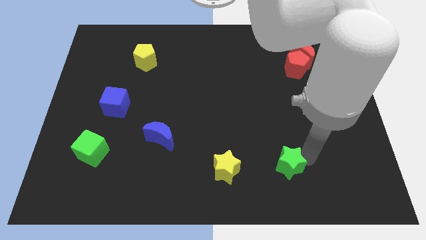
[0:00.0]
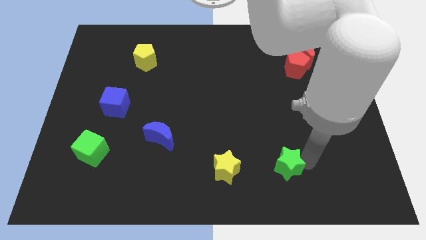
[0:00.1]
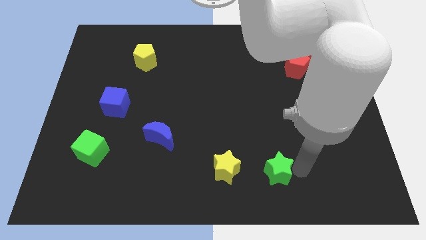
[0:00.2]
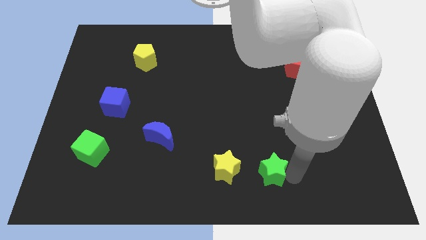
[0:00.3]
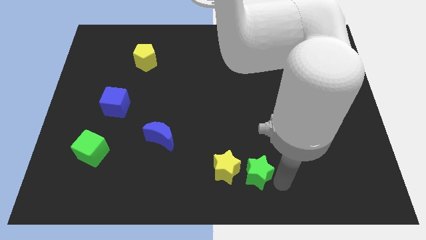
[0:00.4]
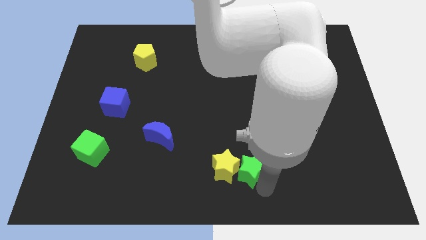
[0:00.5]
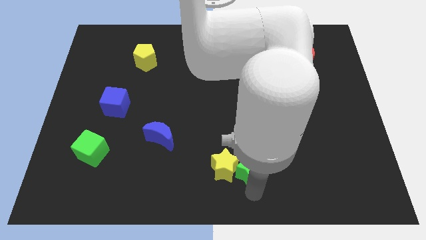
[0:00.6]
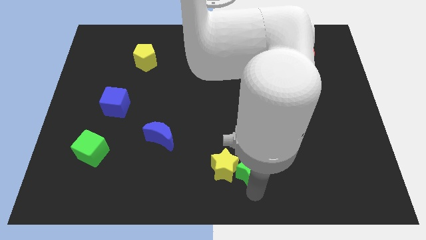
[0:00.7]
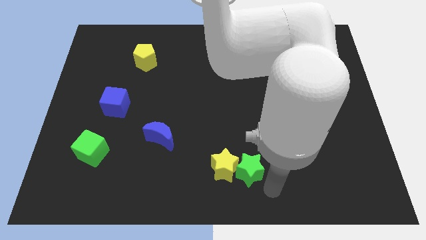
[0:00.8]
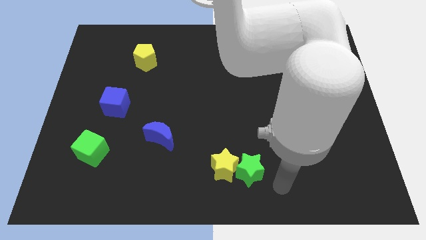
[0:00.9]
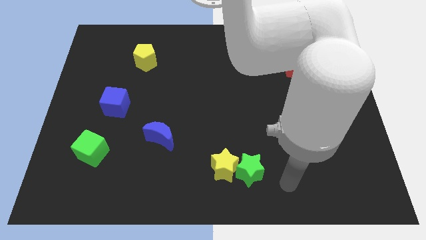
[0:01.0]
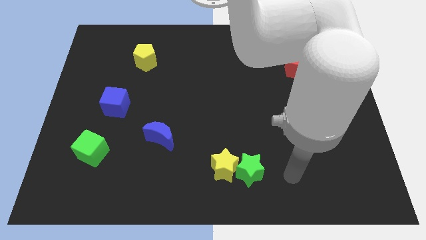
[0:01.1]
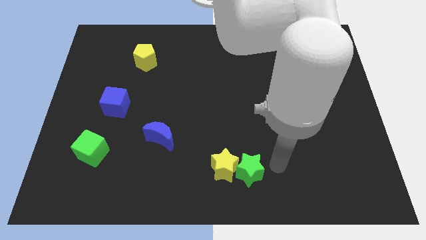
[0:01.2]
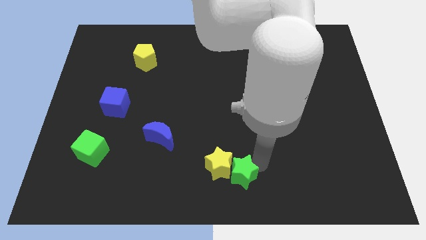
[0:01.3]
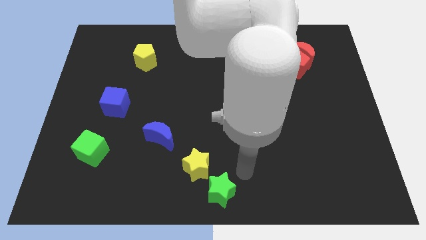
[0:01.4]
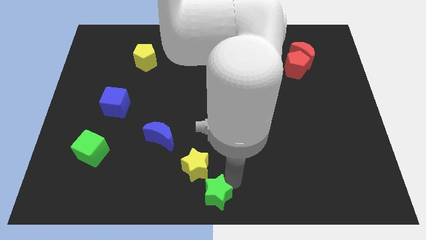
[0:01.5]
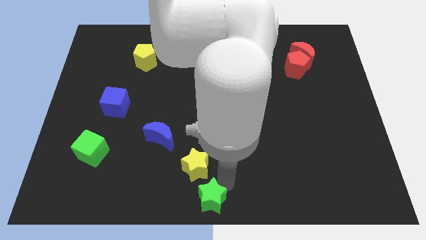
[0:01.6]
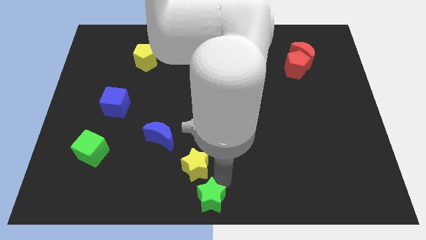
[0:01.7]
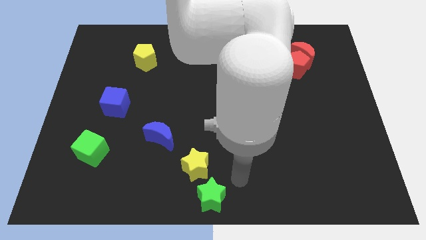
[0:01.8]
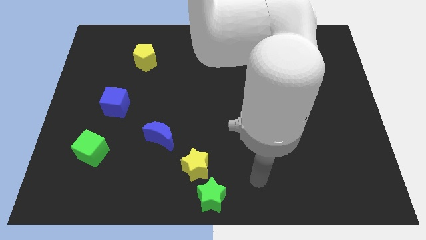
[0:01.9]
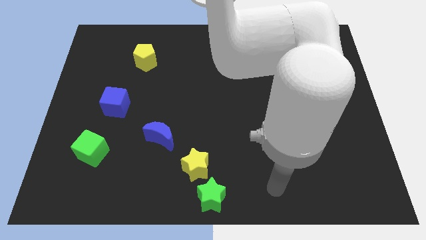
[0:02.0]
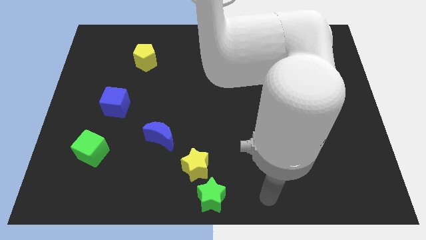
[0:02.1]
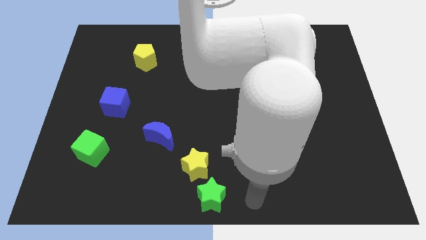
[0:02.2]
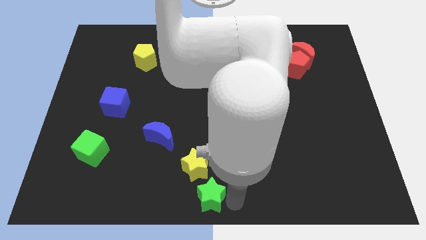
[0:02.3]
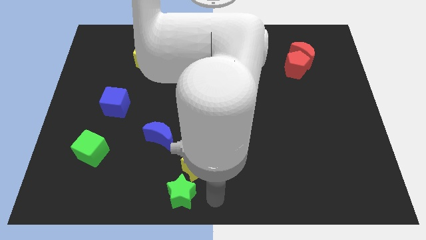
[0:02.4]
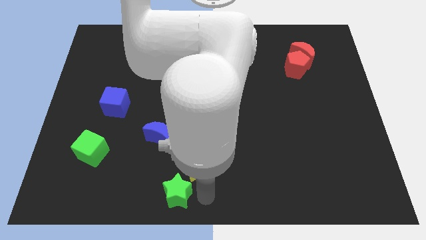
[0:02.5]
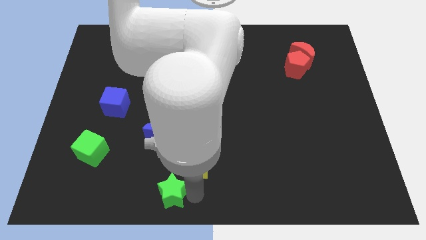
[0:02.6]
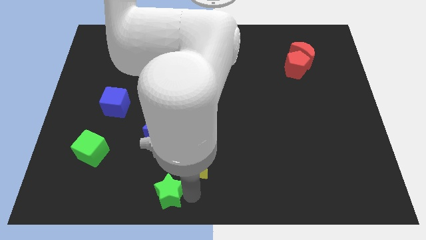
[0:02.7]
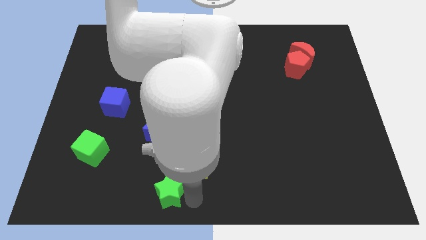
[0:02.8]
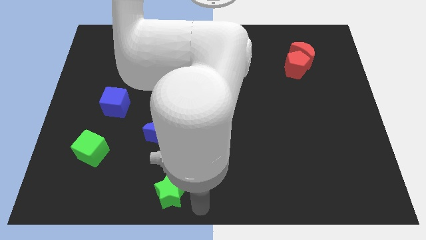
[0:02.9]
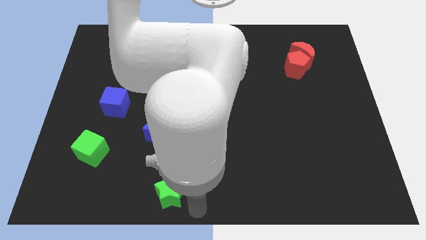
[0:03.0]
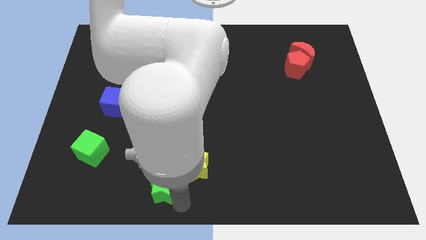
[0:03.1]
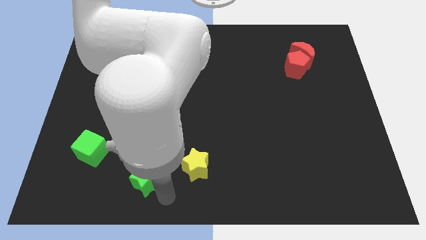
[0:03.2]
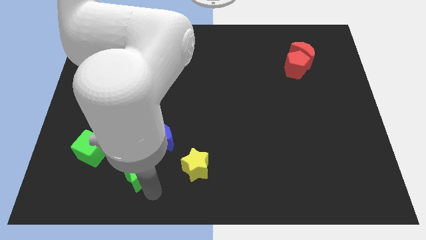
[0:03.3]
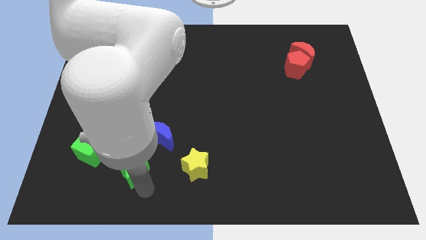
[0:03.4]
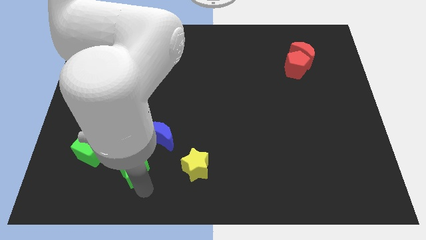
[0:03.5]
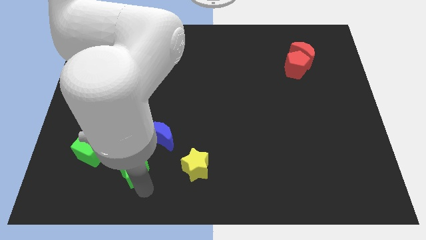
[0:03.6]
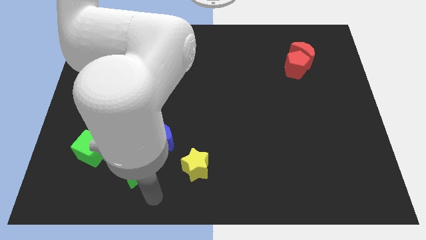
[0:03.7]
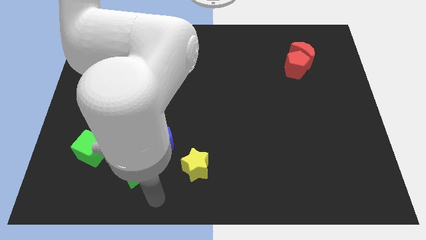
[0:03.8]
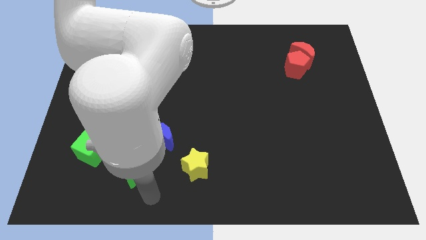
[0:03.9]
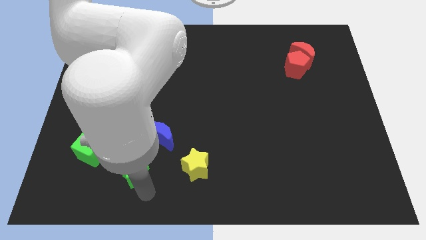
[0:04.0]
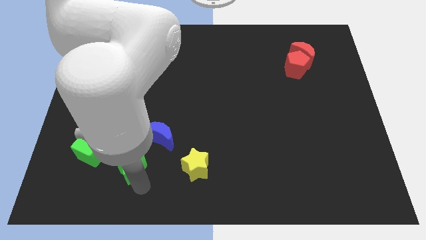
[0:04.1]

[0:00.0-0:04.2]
slide green star to the left of yellow star

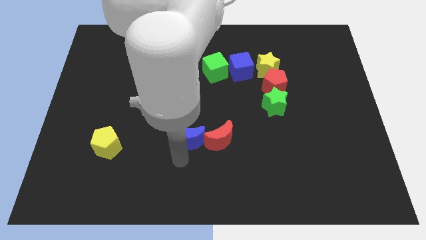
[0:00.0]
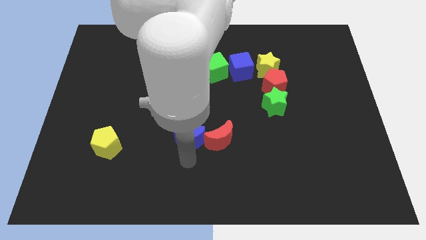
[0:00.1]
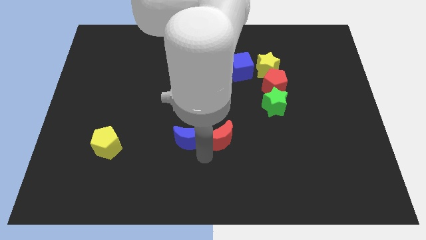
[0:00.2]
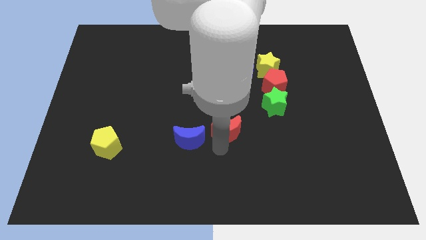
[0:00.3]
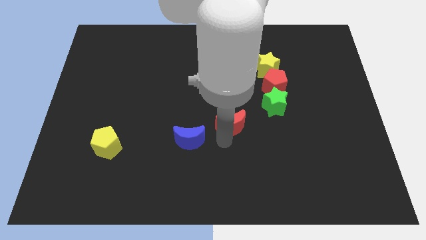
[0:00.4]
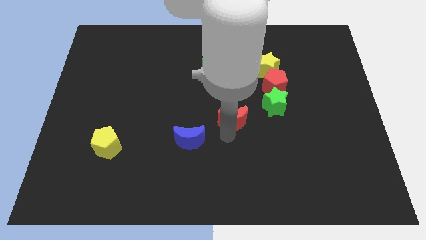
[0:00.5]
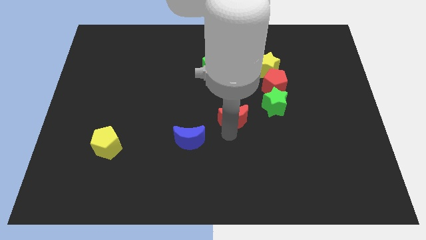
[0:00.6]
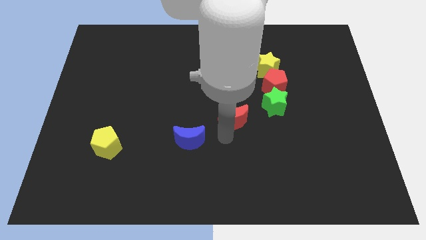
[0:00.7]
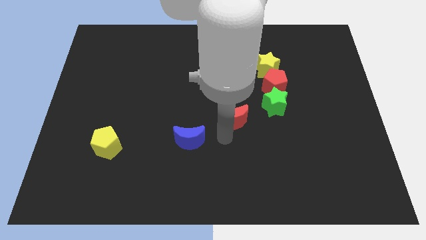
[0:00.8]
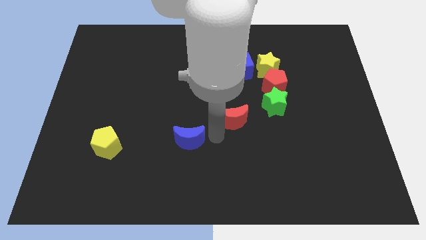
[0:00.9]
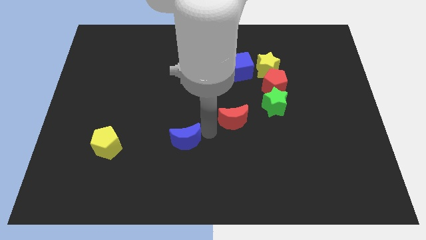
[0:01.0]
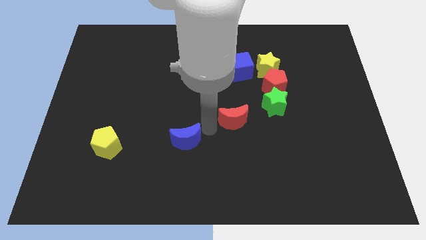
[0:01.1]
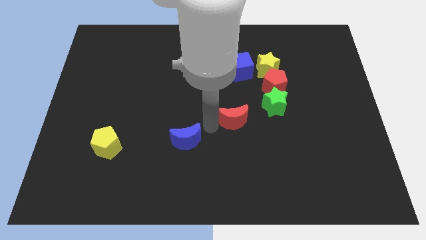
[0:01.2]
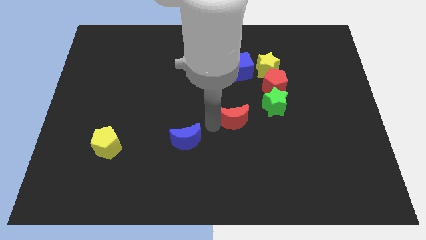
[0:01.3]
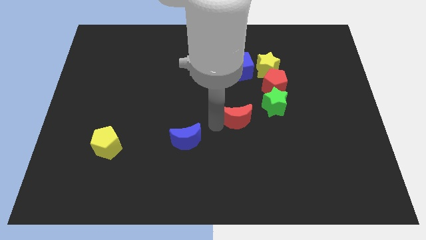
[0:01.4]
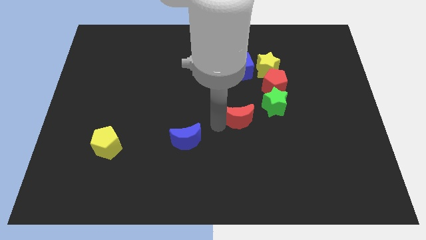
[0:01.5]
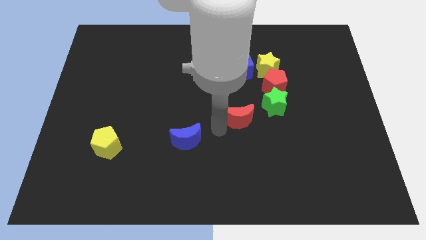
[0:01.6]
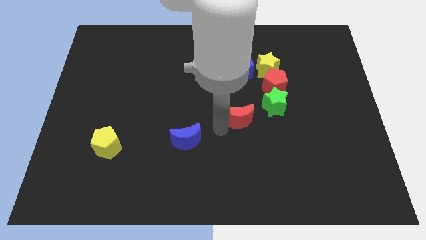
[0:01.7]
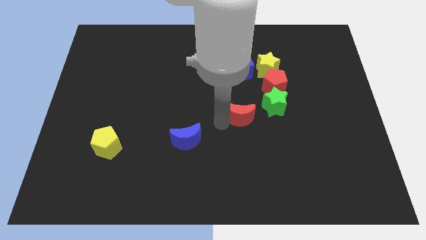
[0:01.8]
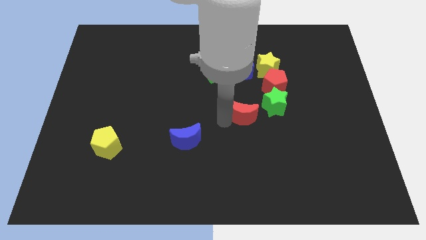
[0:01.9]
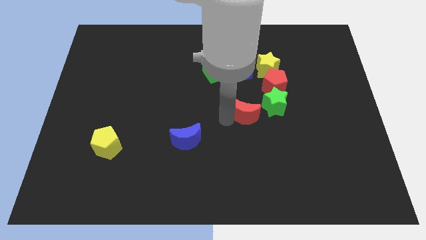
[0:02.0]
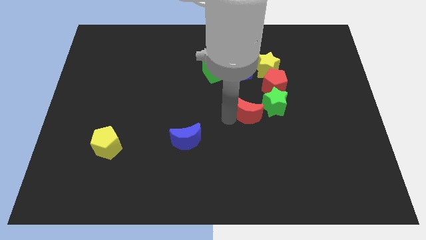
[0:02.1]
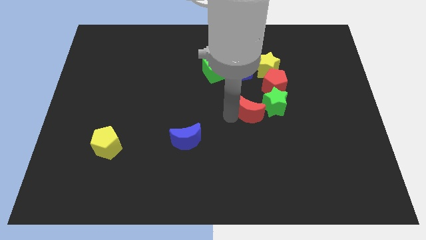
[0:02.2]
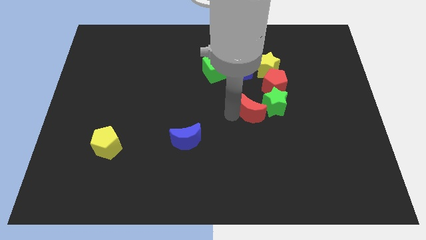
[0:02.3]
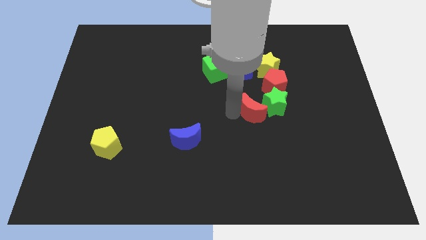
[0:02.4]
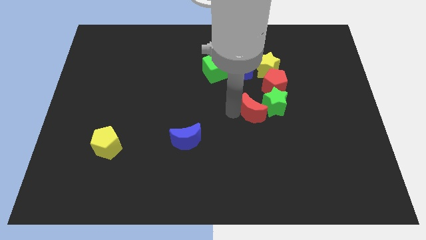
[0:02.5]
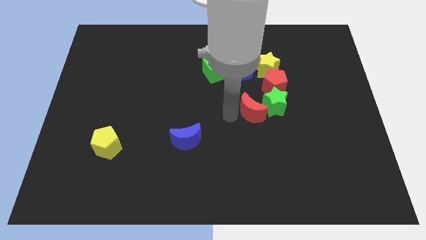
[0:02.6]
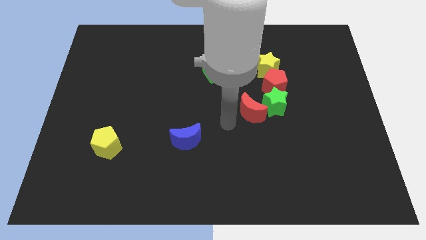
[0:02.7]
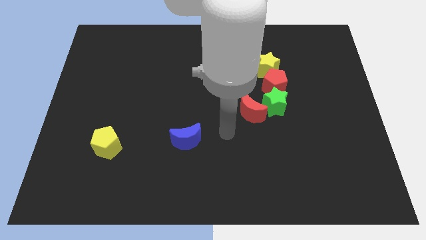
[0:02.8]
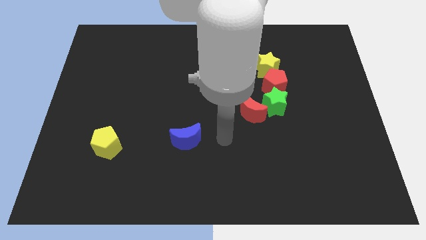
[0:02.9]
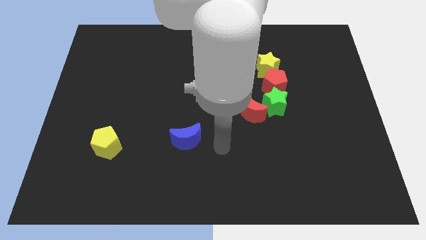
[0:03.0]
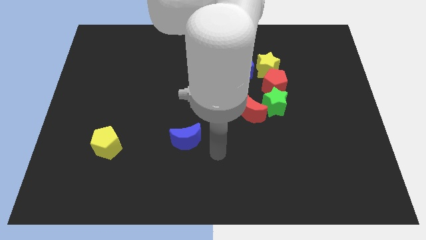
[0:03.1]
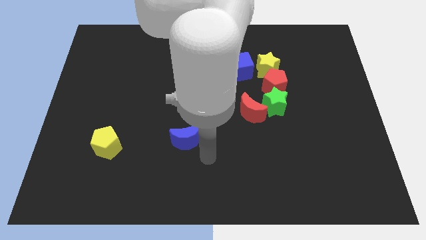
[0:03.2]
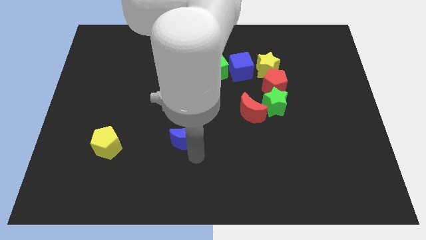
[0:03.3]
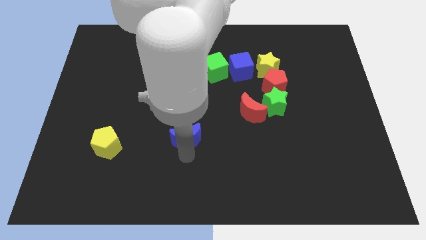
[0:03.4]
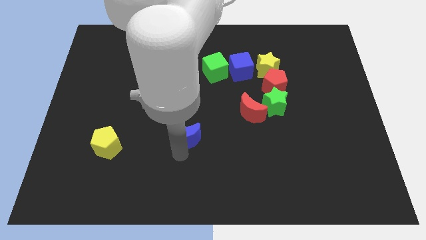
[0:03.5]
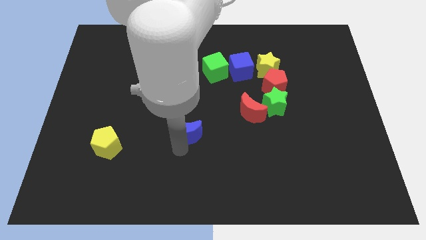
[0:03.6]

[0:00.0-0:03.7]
move the red crescent close to the green star

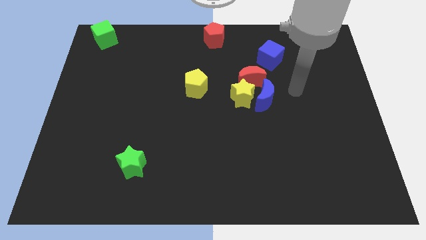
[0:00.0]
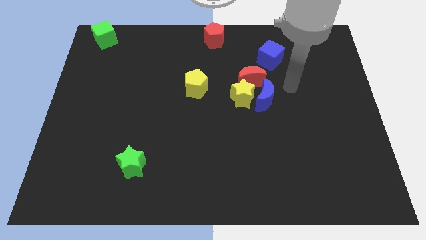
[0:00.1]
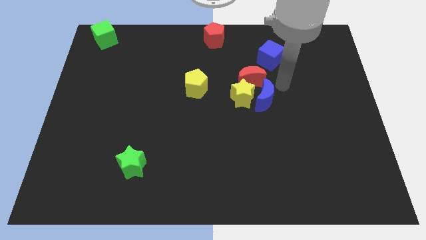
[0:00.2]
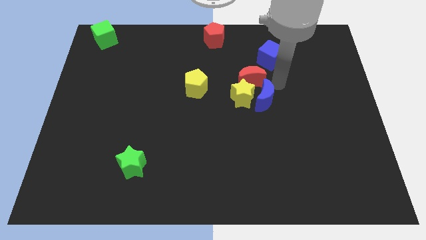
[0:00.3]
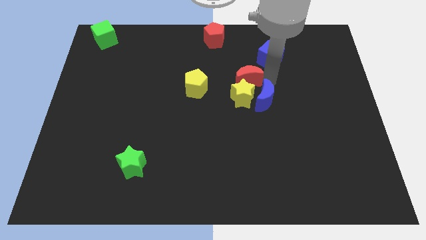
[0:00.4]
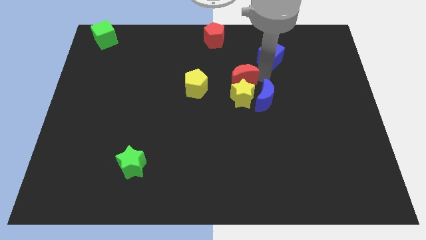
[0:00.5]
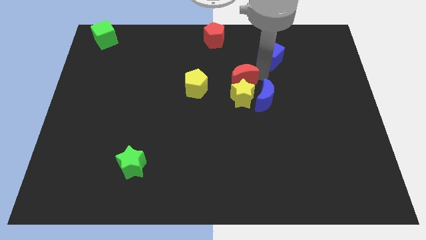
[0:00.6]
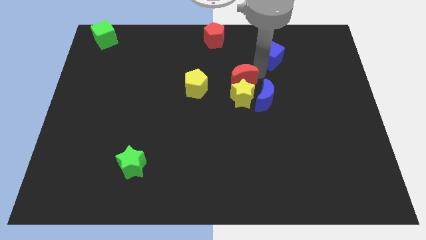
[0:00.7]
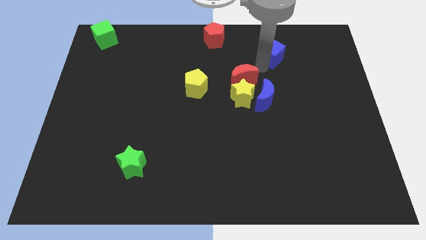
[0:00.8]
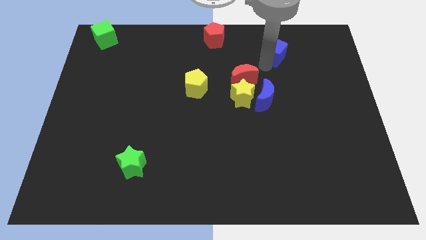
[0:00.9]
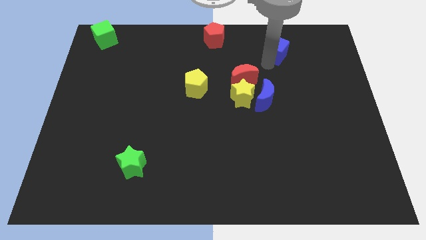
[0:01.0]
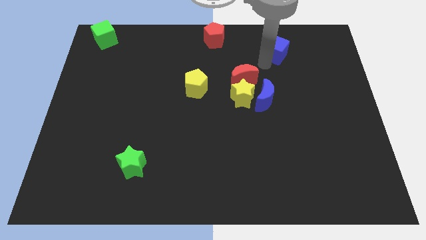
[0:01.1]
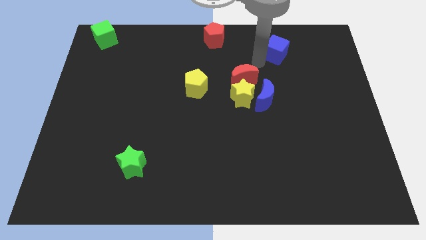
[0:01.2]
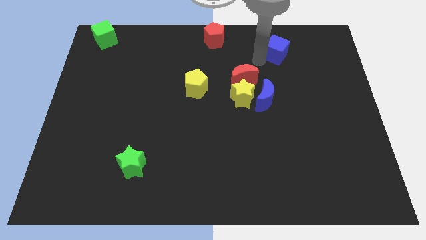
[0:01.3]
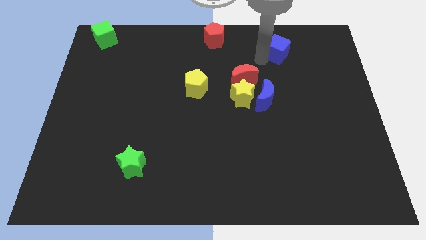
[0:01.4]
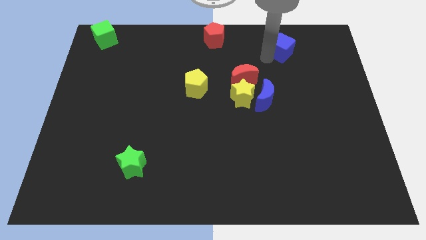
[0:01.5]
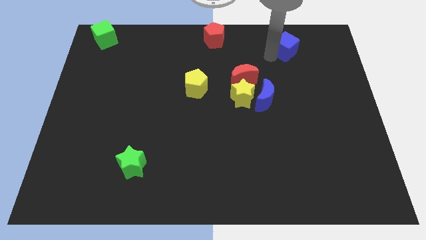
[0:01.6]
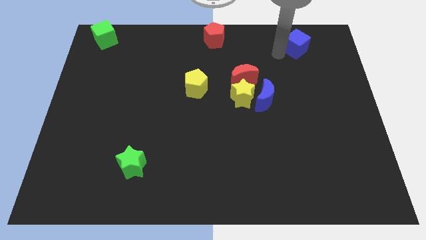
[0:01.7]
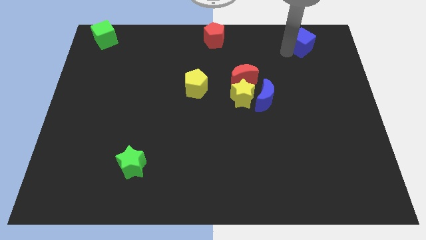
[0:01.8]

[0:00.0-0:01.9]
push the blue cube to the top right side of the board
